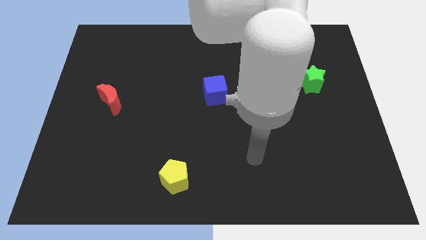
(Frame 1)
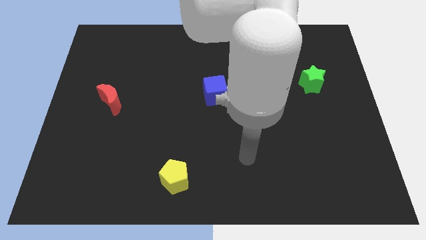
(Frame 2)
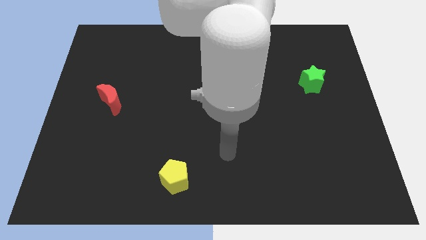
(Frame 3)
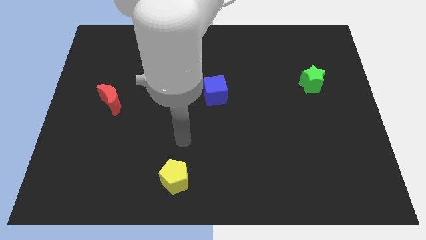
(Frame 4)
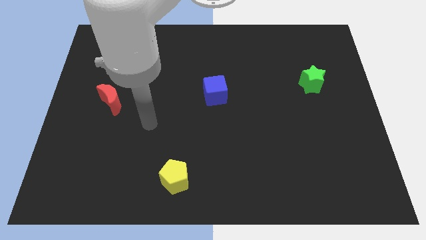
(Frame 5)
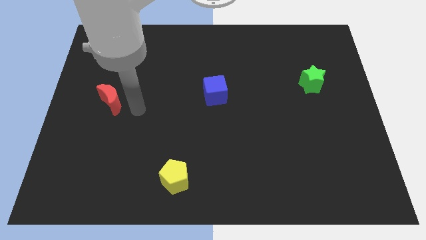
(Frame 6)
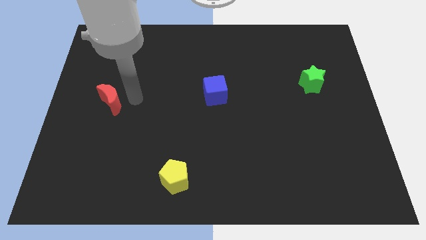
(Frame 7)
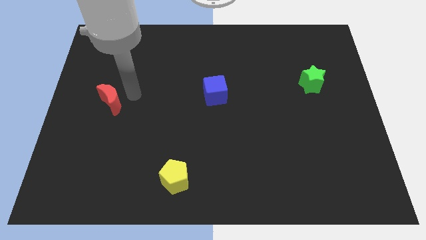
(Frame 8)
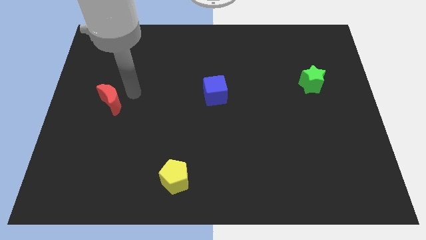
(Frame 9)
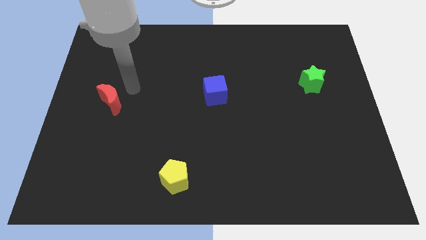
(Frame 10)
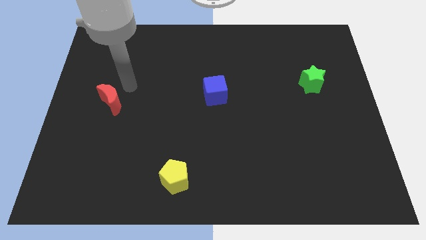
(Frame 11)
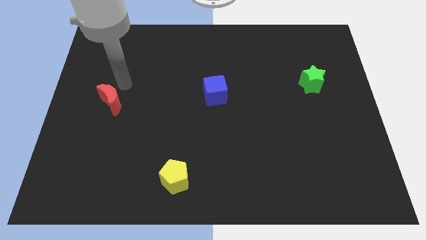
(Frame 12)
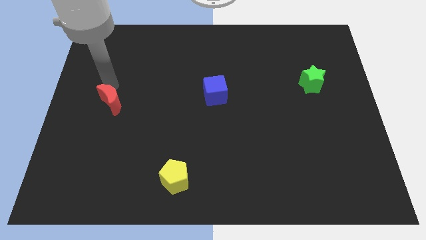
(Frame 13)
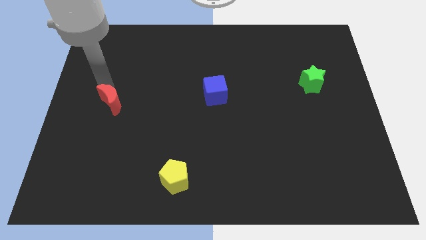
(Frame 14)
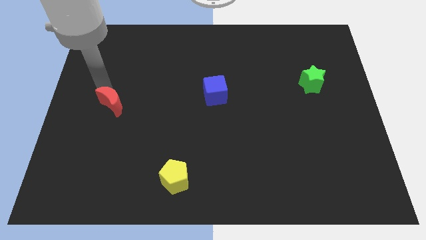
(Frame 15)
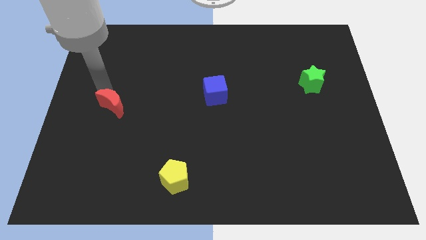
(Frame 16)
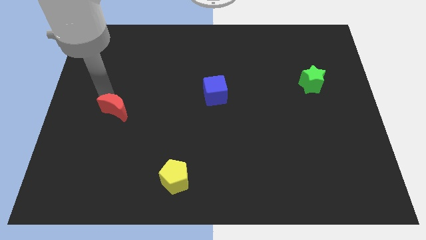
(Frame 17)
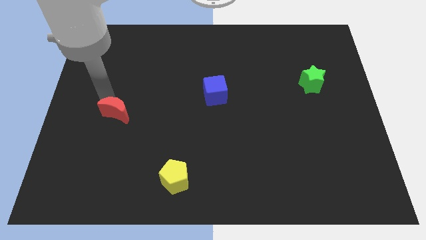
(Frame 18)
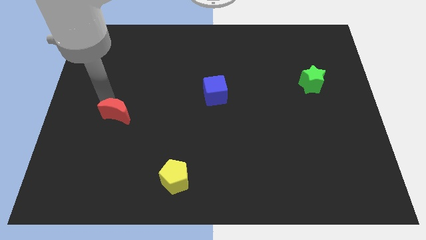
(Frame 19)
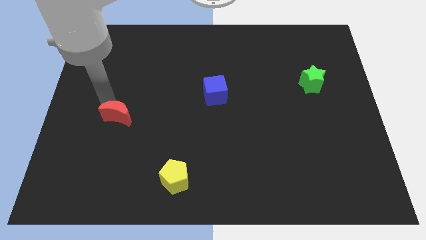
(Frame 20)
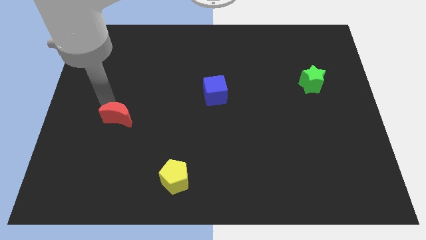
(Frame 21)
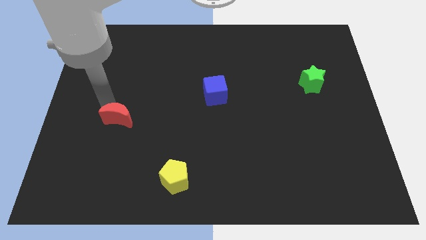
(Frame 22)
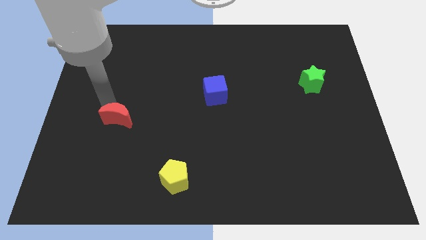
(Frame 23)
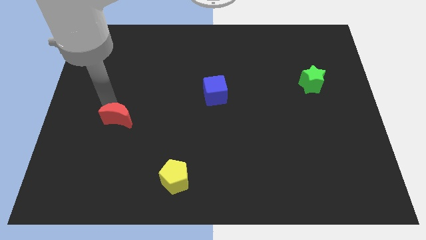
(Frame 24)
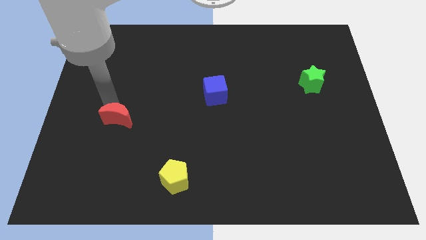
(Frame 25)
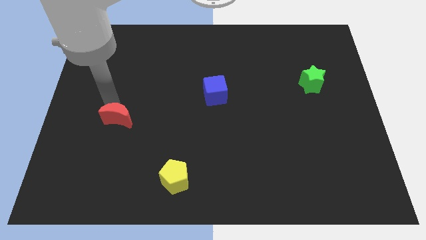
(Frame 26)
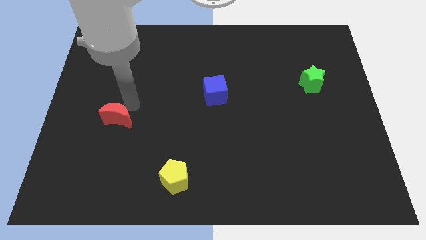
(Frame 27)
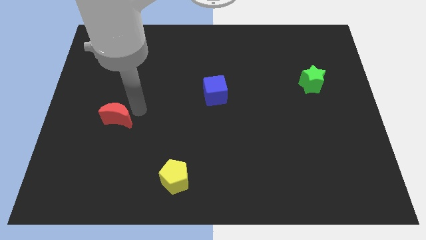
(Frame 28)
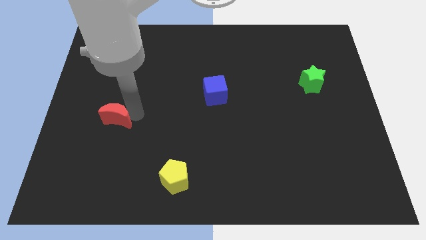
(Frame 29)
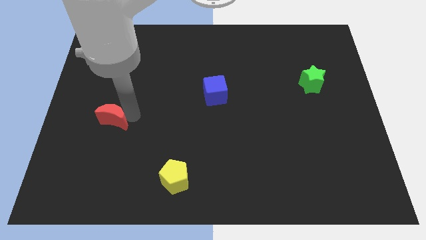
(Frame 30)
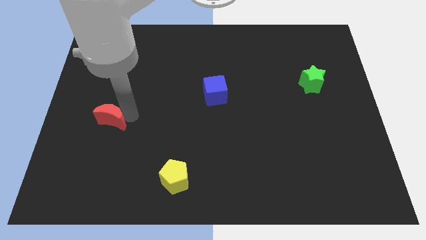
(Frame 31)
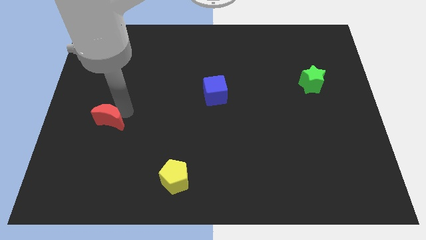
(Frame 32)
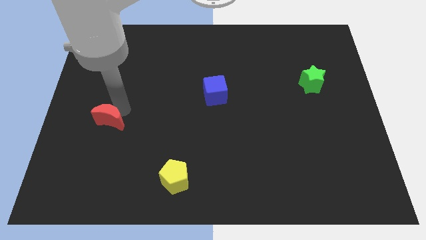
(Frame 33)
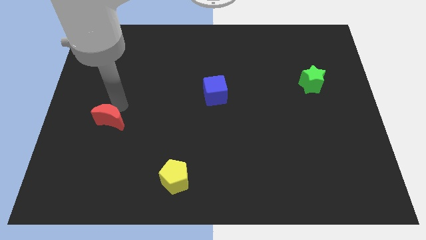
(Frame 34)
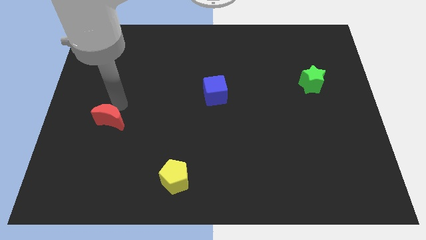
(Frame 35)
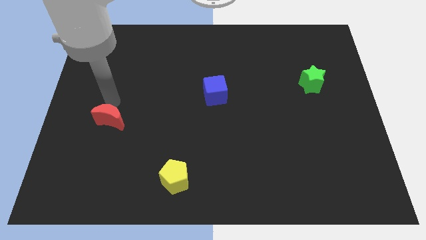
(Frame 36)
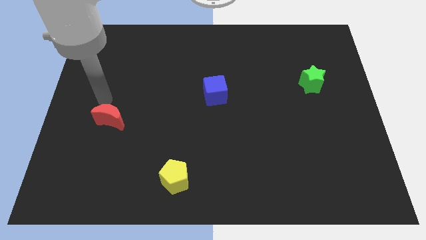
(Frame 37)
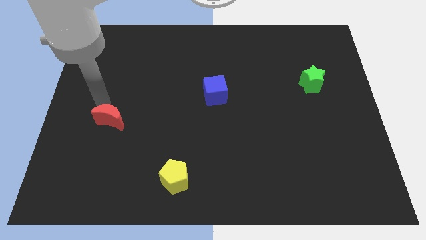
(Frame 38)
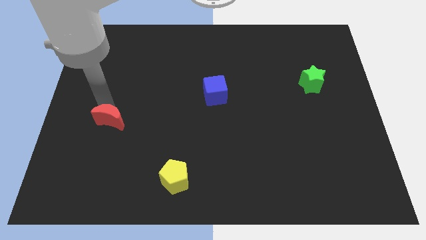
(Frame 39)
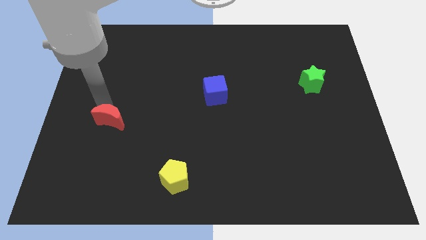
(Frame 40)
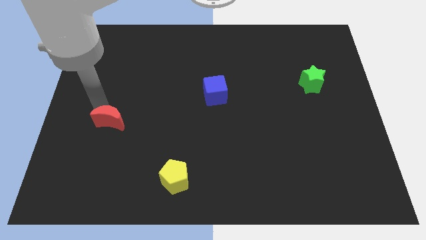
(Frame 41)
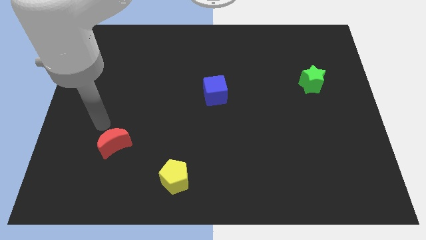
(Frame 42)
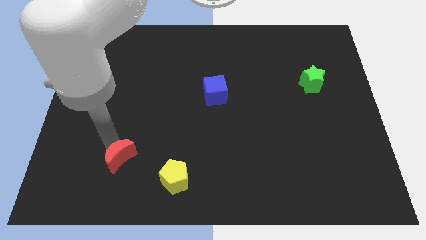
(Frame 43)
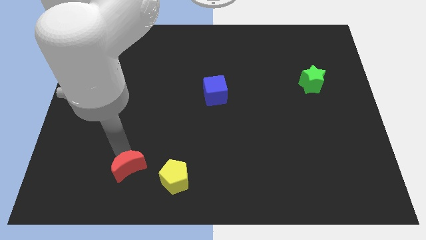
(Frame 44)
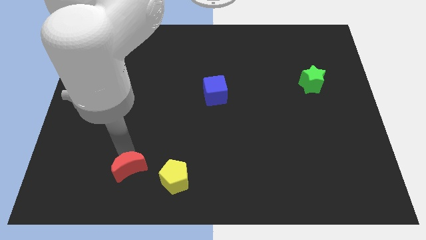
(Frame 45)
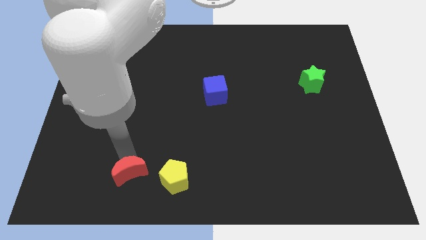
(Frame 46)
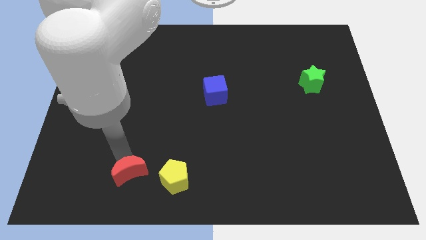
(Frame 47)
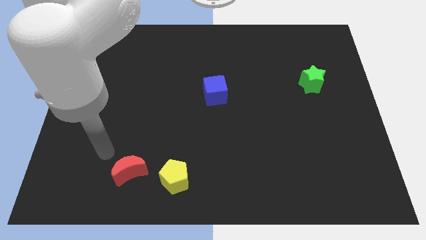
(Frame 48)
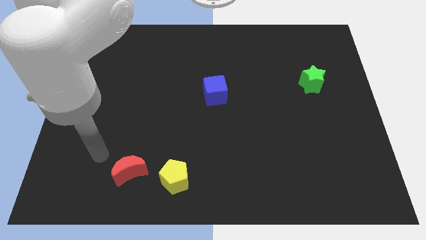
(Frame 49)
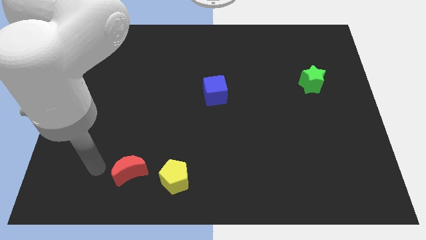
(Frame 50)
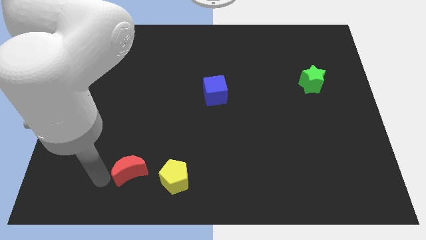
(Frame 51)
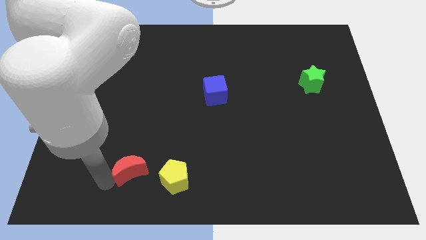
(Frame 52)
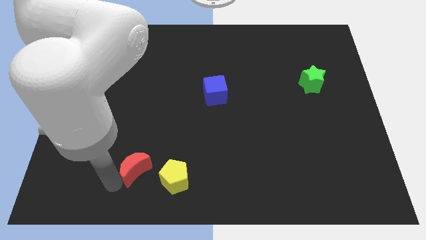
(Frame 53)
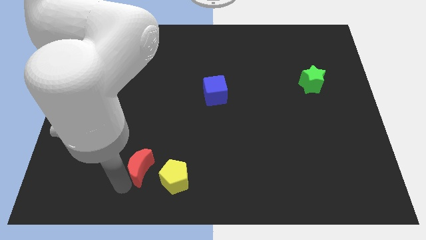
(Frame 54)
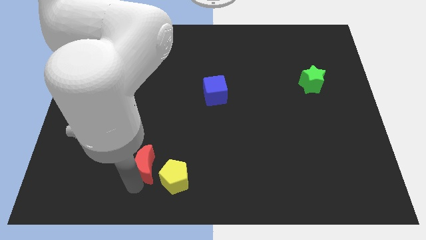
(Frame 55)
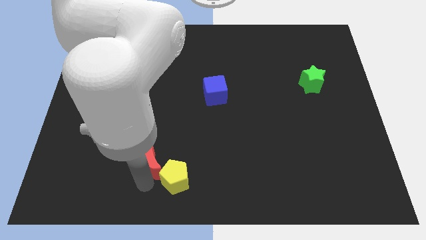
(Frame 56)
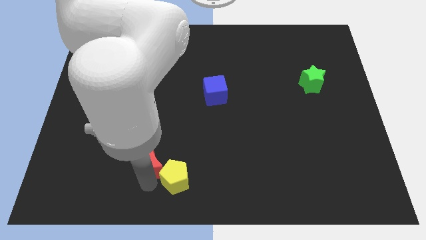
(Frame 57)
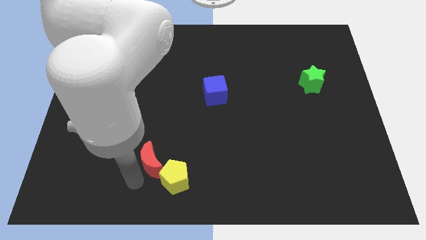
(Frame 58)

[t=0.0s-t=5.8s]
push the red moon close to the yellow pentagon

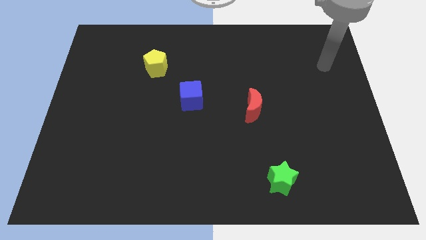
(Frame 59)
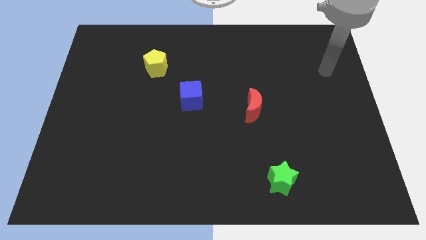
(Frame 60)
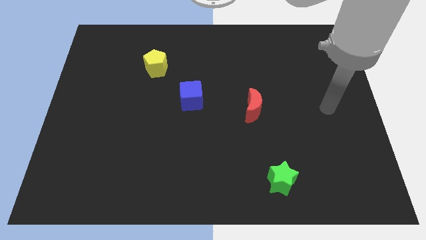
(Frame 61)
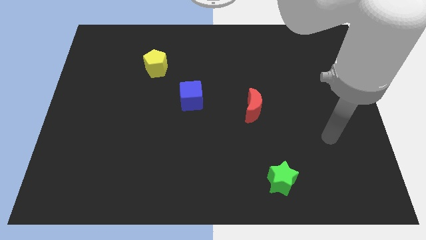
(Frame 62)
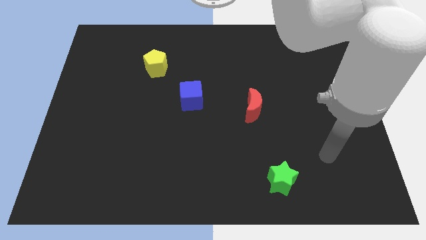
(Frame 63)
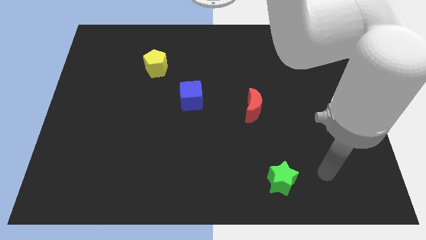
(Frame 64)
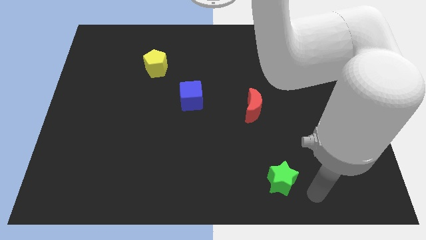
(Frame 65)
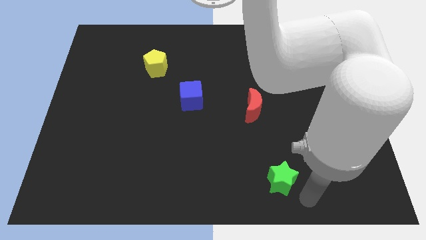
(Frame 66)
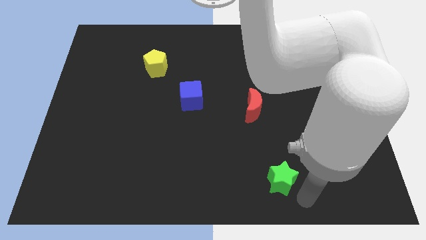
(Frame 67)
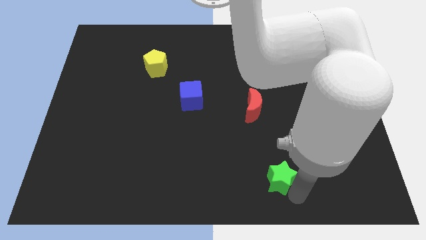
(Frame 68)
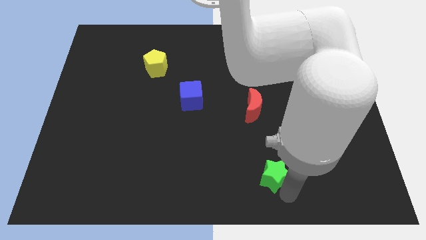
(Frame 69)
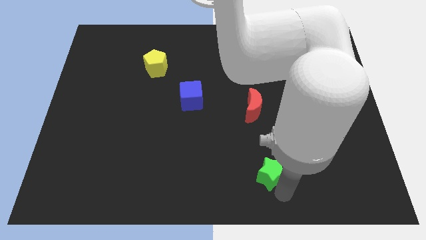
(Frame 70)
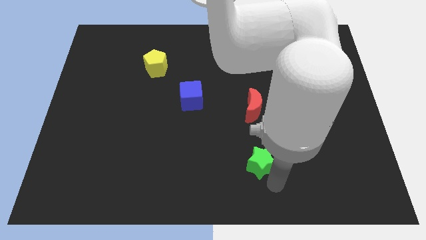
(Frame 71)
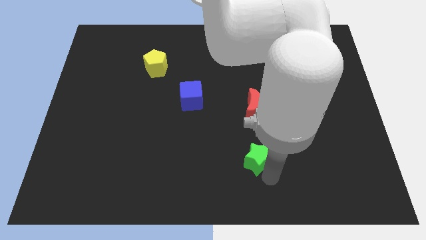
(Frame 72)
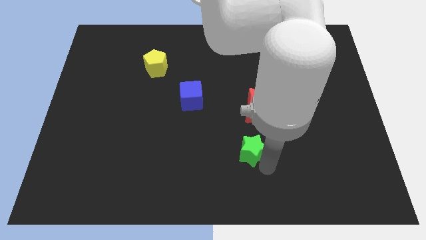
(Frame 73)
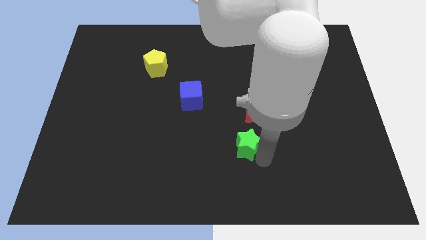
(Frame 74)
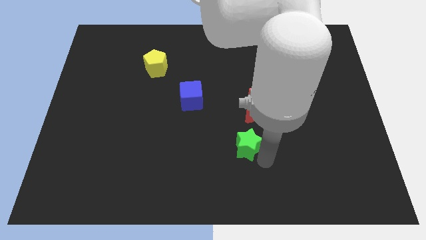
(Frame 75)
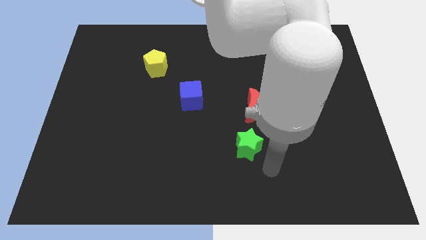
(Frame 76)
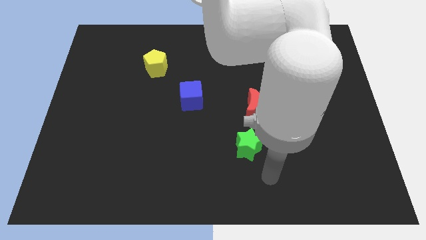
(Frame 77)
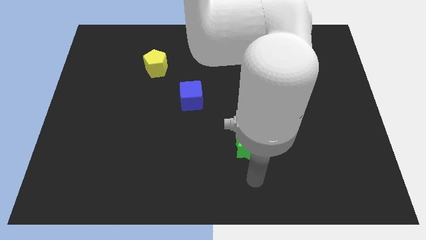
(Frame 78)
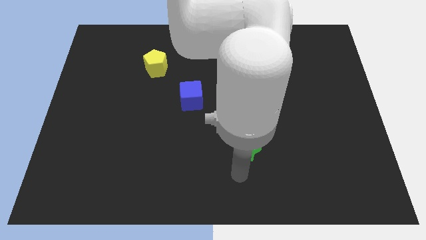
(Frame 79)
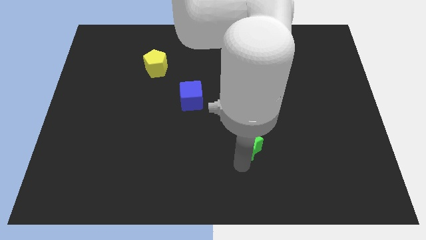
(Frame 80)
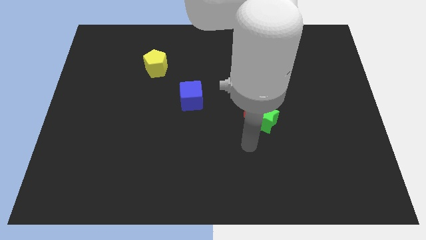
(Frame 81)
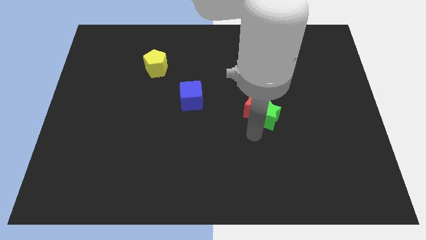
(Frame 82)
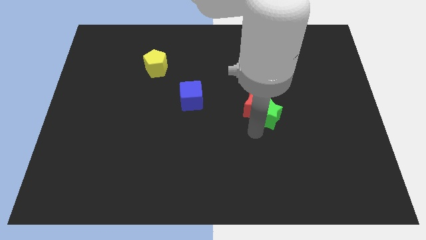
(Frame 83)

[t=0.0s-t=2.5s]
push the star close to the red block

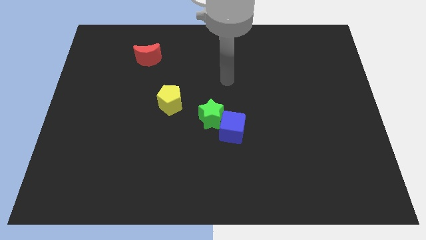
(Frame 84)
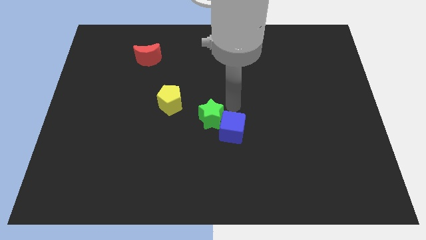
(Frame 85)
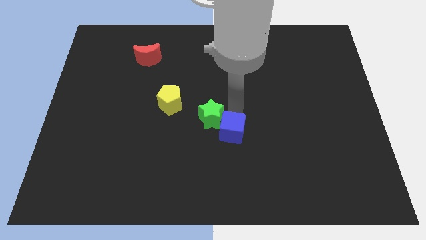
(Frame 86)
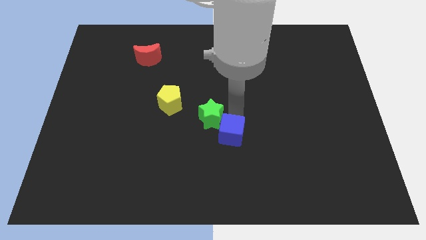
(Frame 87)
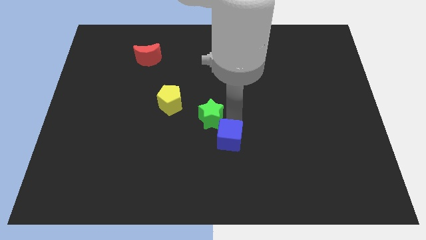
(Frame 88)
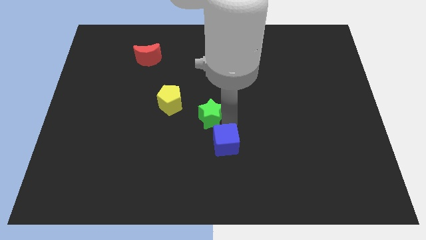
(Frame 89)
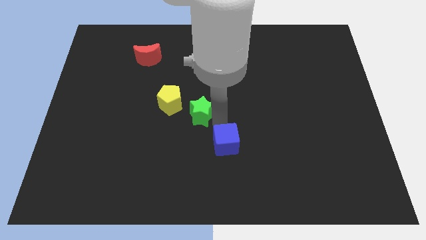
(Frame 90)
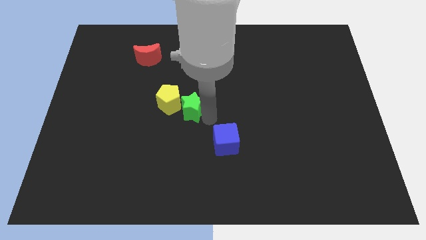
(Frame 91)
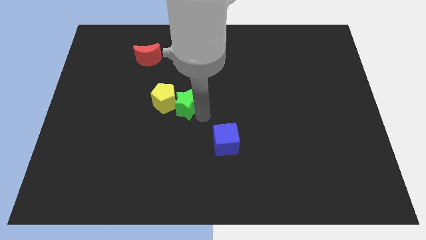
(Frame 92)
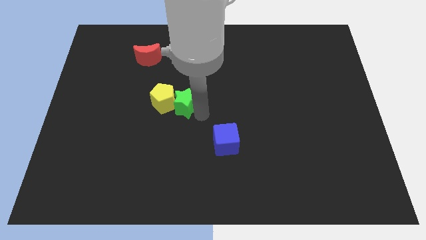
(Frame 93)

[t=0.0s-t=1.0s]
push the green star towards the yellow pentagon
